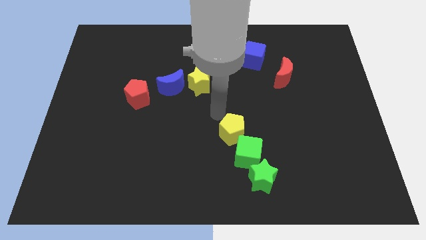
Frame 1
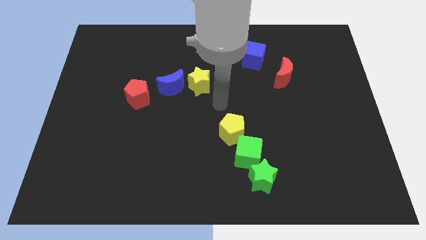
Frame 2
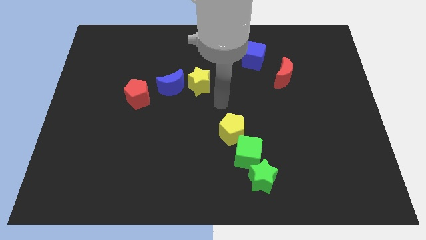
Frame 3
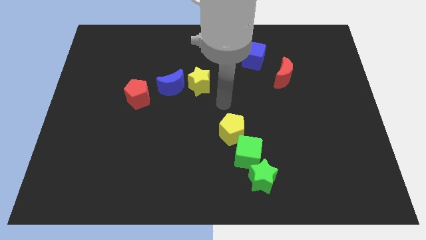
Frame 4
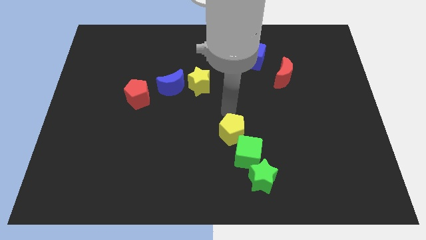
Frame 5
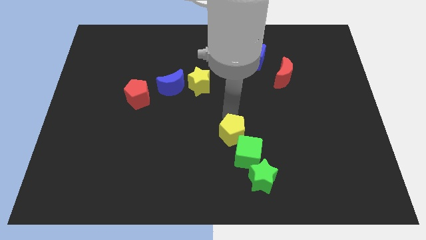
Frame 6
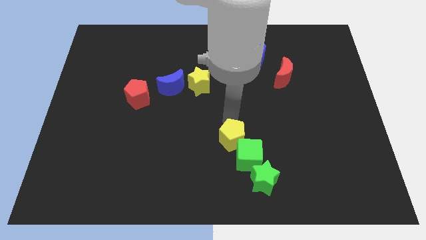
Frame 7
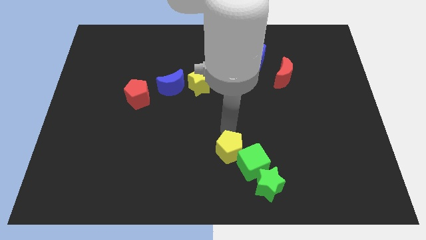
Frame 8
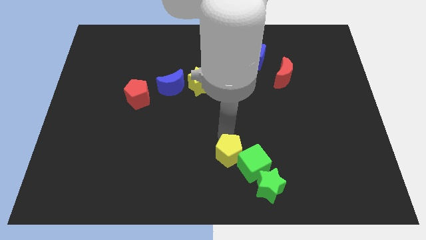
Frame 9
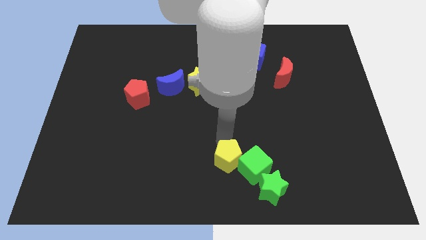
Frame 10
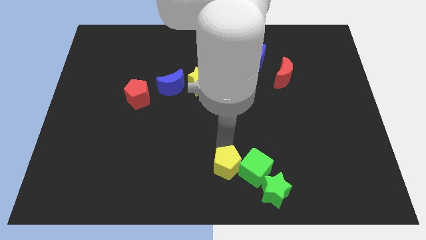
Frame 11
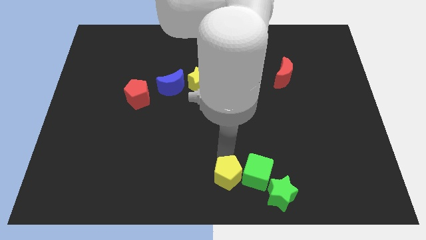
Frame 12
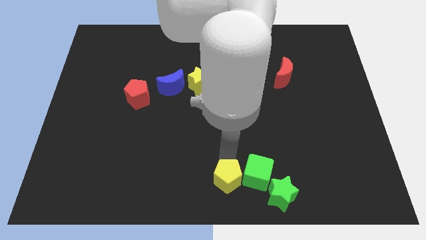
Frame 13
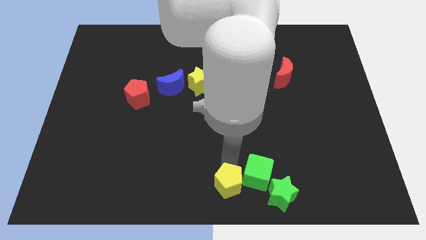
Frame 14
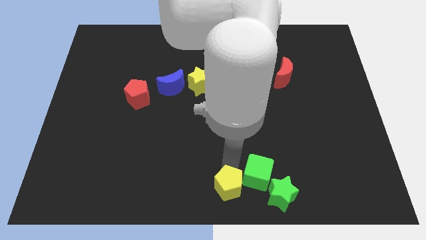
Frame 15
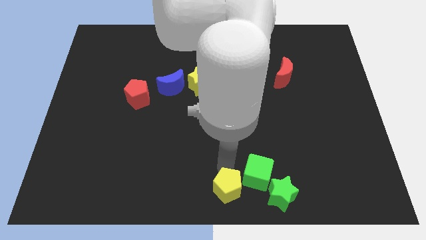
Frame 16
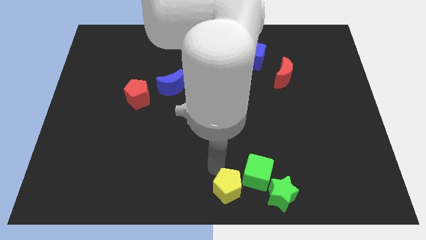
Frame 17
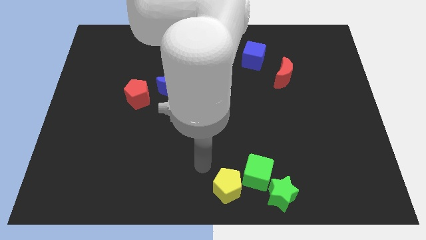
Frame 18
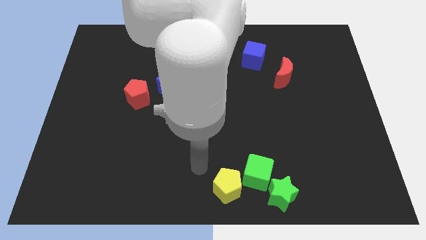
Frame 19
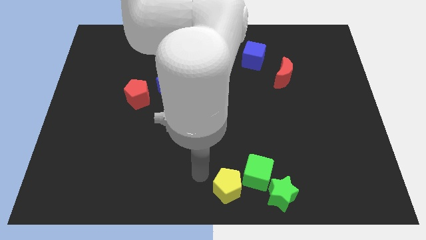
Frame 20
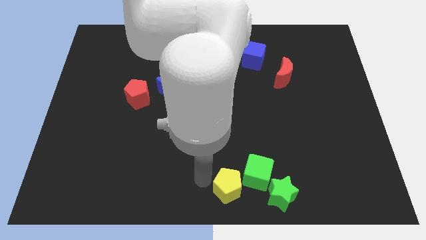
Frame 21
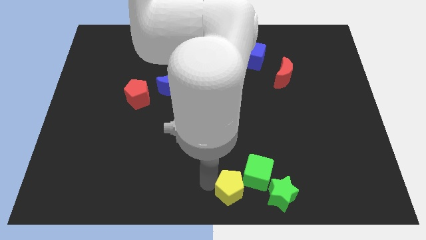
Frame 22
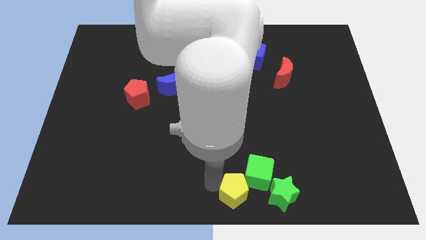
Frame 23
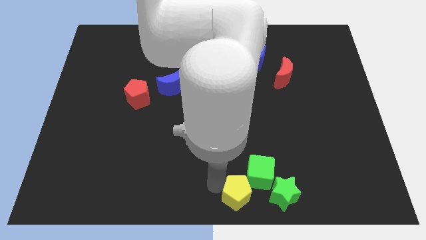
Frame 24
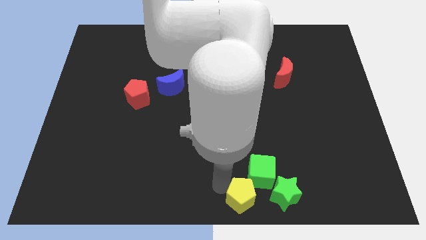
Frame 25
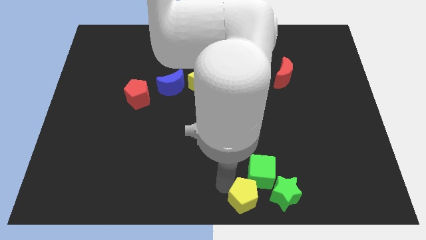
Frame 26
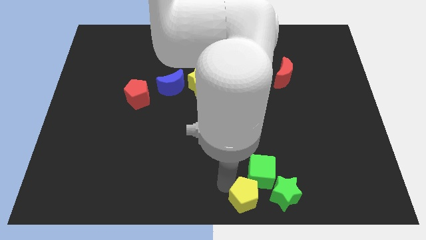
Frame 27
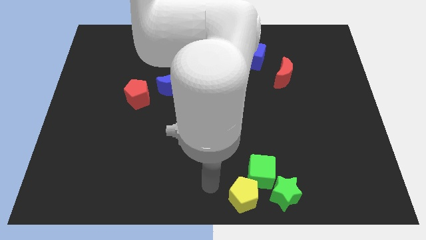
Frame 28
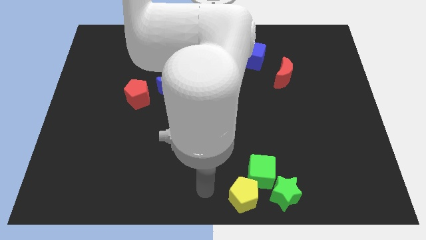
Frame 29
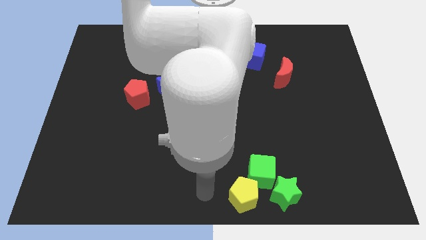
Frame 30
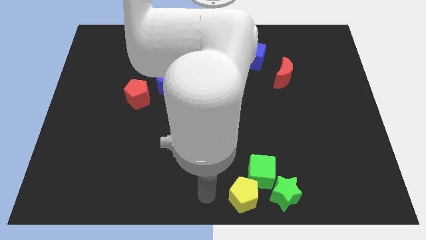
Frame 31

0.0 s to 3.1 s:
move the yellow pentagon to the left of the green star

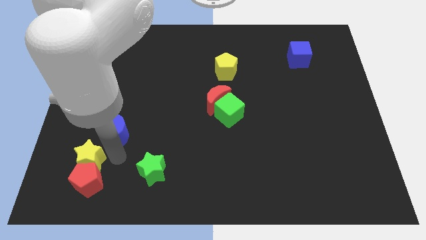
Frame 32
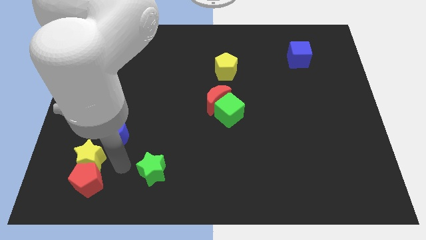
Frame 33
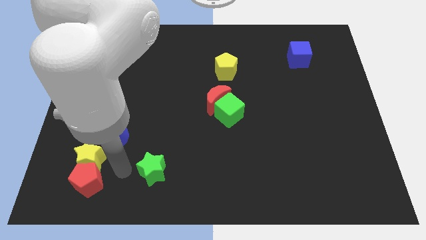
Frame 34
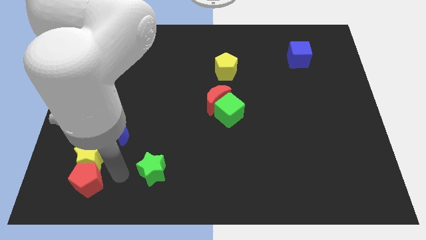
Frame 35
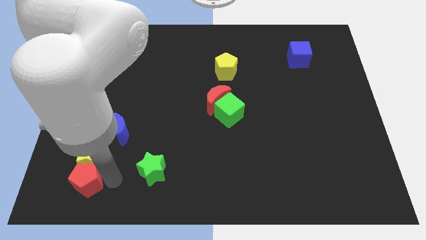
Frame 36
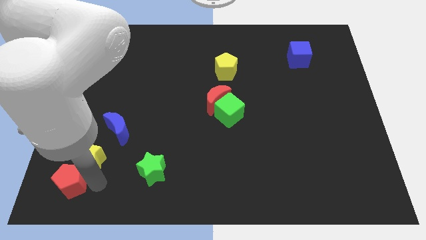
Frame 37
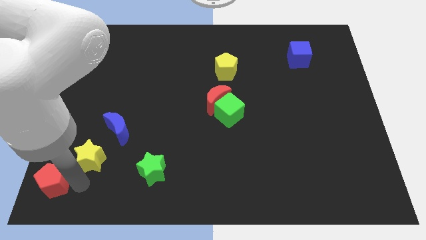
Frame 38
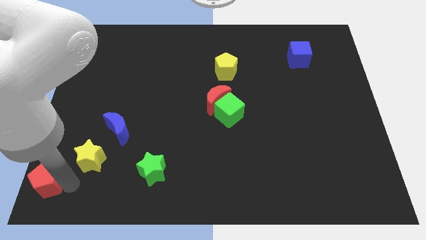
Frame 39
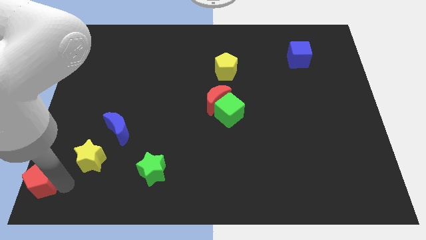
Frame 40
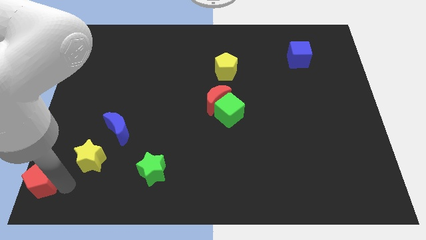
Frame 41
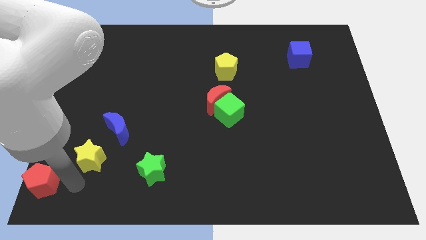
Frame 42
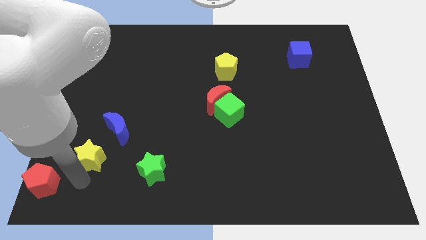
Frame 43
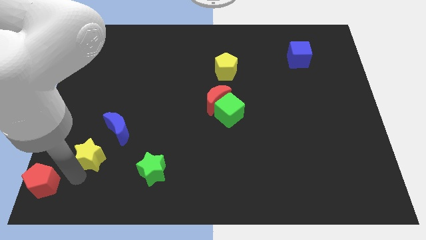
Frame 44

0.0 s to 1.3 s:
point your arm between yellow star and red pentagon

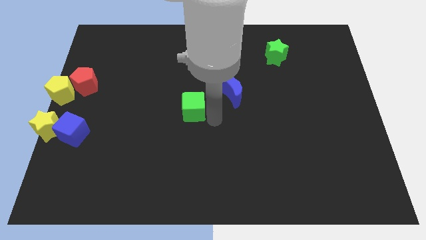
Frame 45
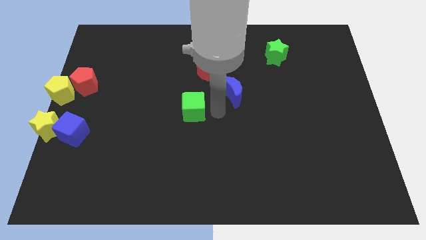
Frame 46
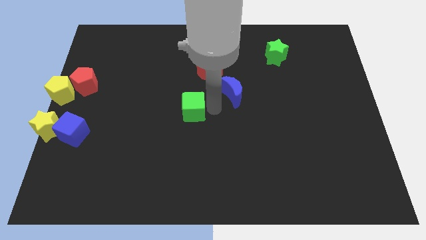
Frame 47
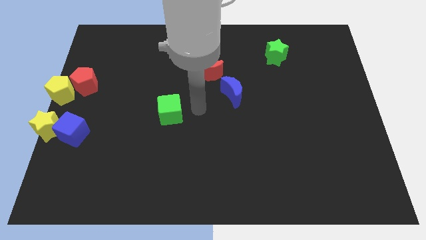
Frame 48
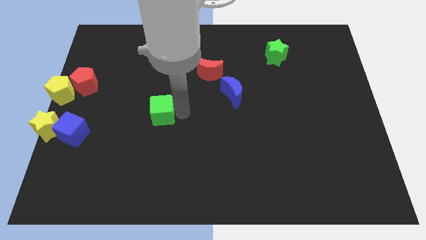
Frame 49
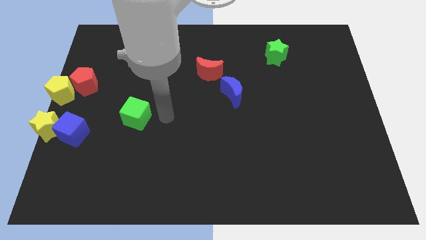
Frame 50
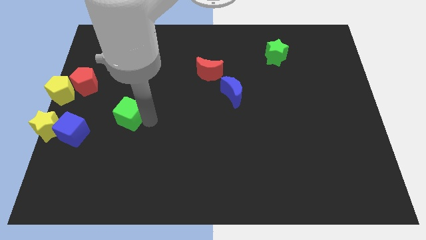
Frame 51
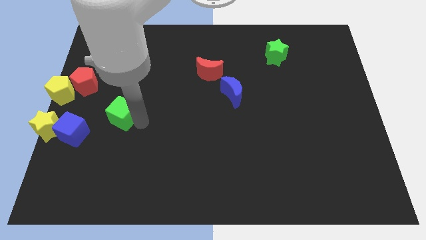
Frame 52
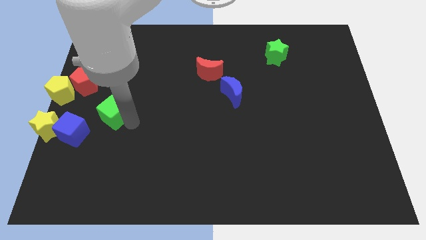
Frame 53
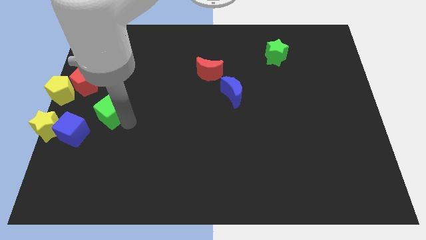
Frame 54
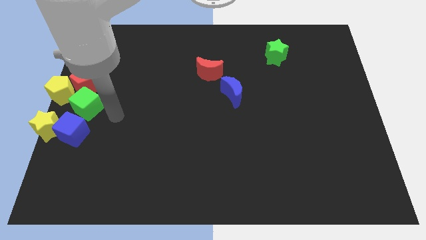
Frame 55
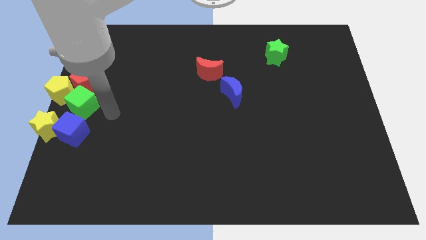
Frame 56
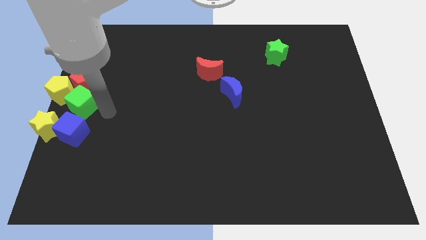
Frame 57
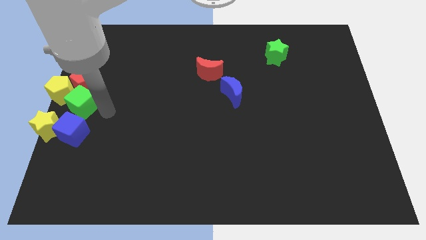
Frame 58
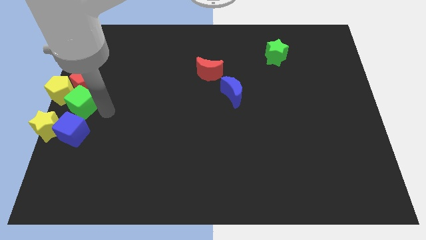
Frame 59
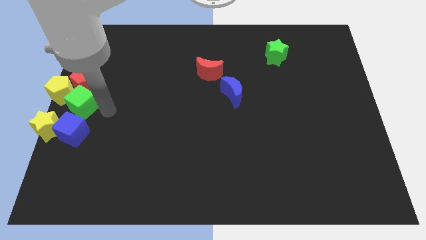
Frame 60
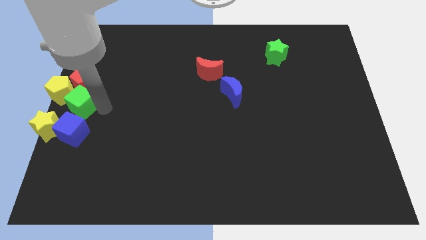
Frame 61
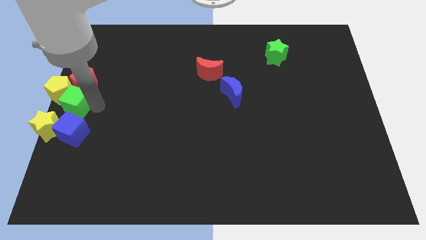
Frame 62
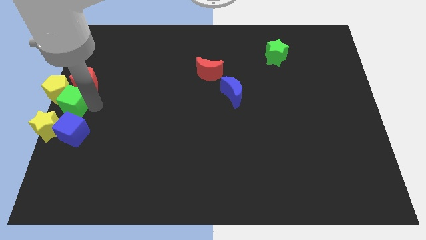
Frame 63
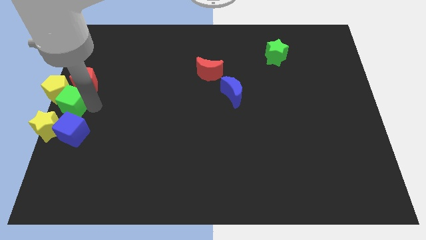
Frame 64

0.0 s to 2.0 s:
push green cube into the yellow pentagon

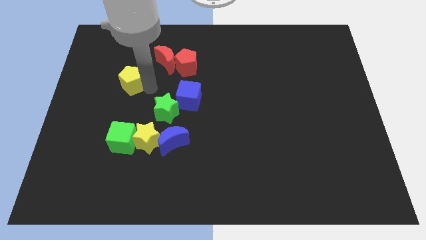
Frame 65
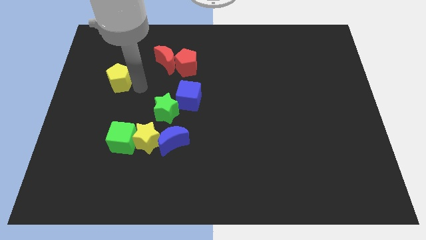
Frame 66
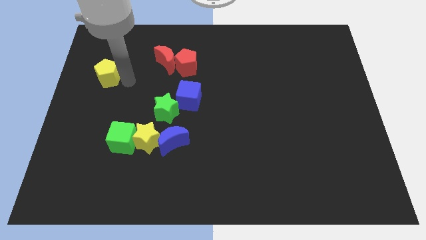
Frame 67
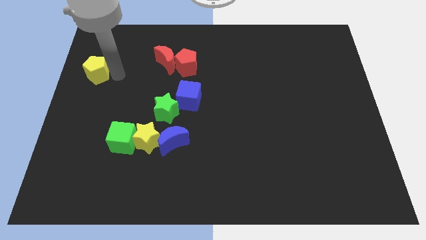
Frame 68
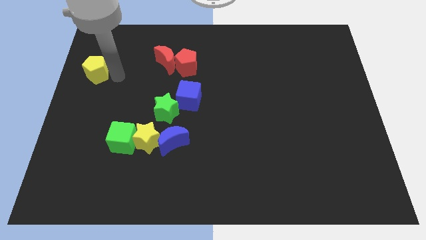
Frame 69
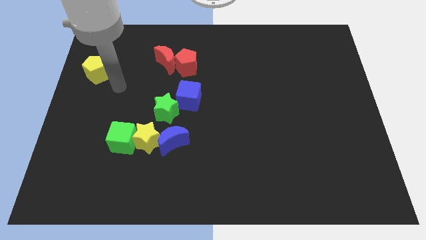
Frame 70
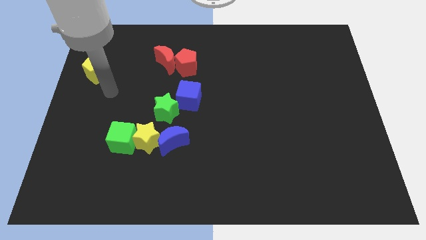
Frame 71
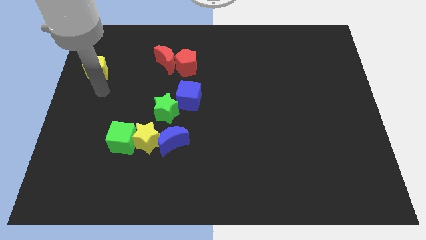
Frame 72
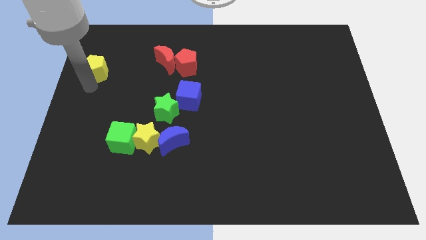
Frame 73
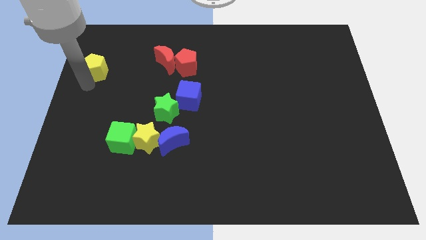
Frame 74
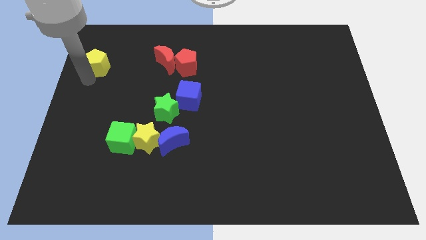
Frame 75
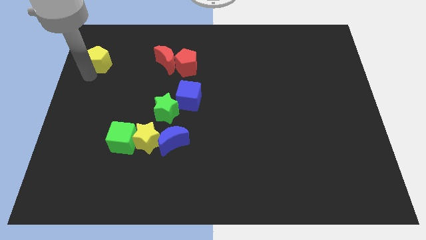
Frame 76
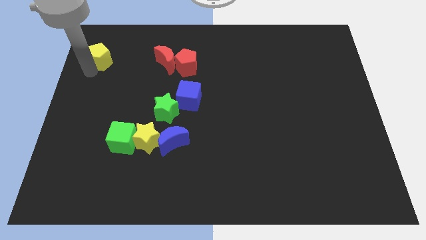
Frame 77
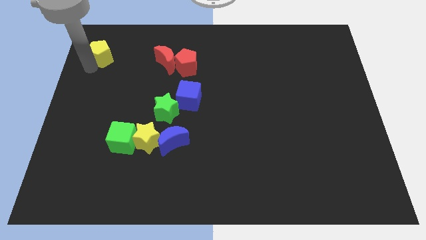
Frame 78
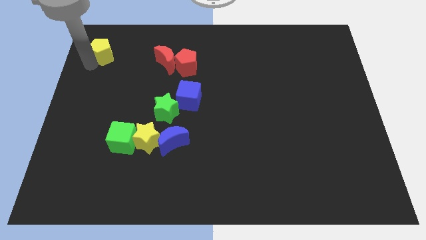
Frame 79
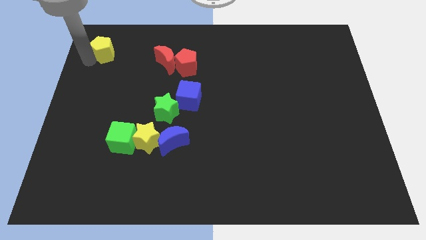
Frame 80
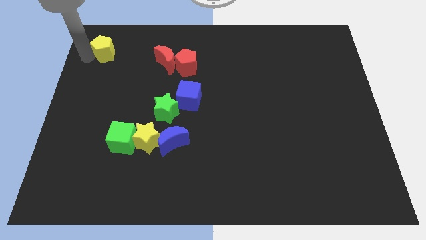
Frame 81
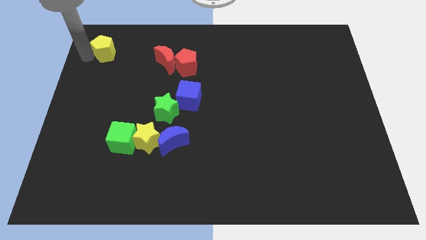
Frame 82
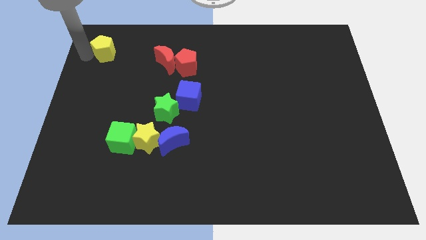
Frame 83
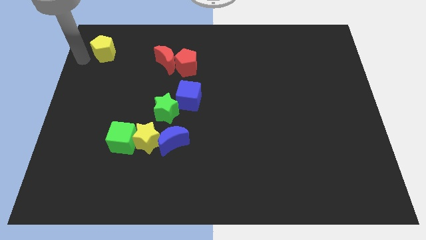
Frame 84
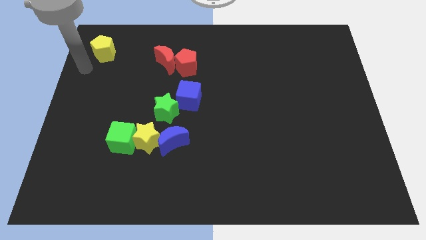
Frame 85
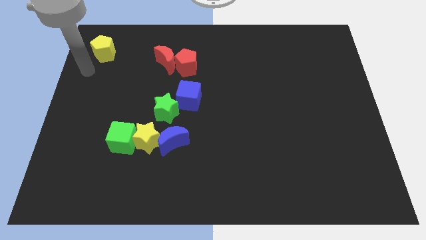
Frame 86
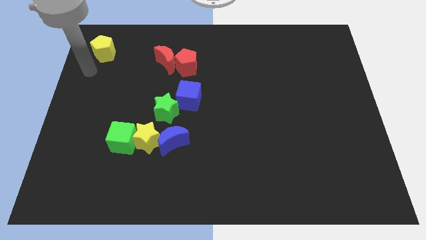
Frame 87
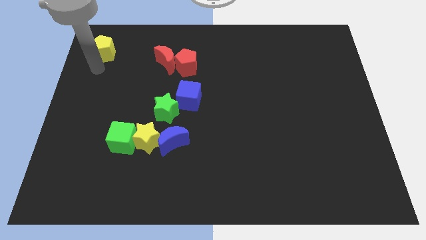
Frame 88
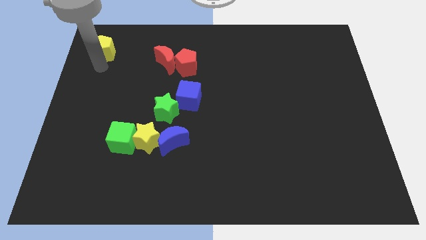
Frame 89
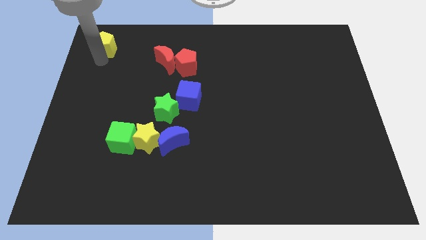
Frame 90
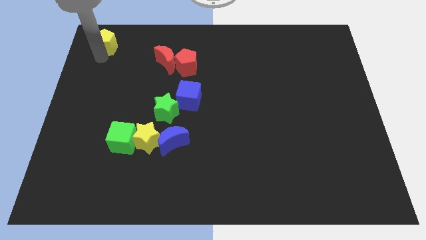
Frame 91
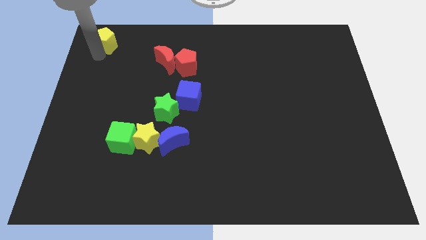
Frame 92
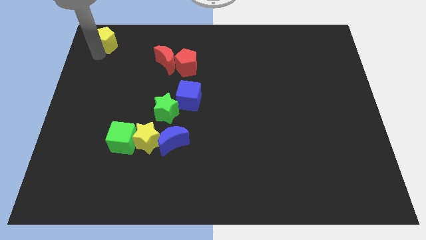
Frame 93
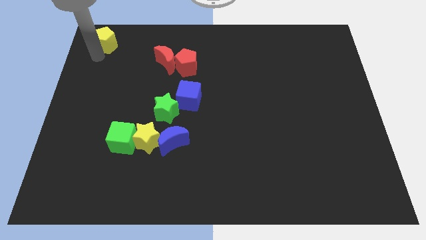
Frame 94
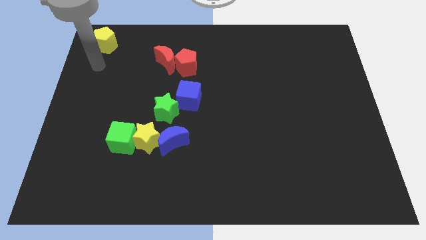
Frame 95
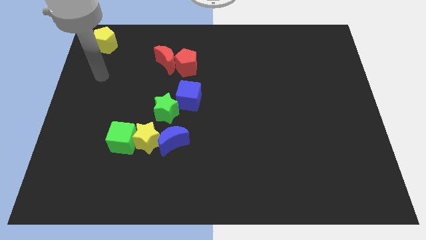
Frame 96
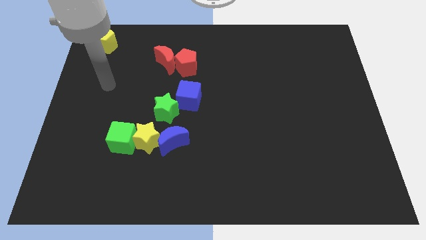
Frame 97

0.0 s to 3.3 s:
move the yellow pentagon to the top left corner of the board
